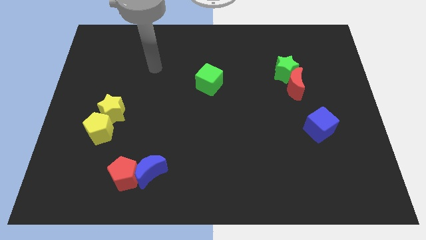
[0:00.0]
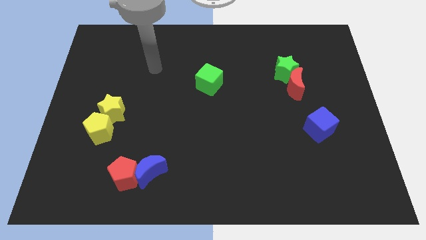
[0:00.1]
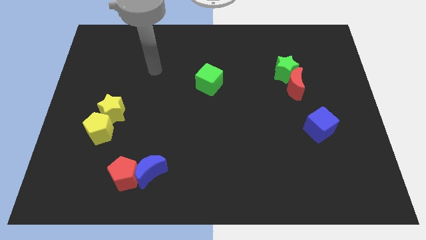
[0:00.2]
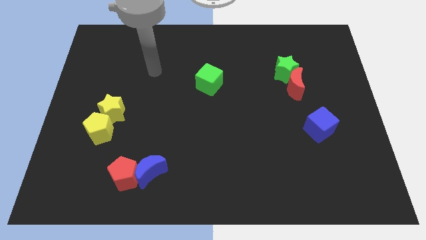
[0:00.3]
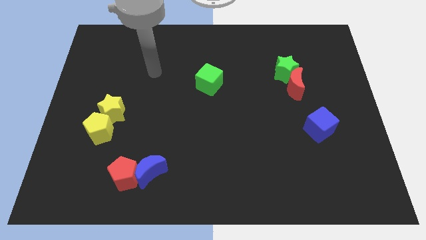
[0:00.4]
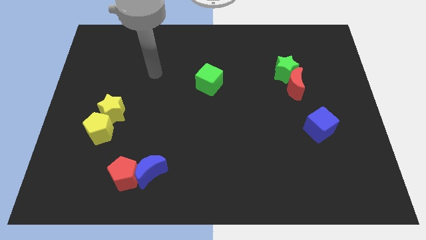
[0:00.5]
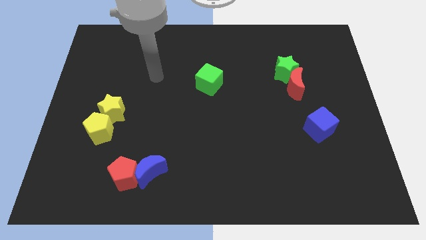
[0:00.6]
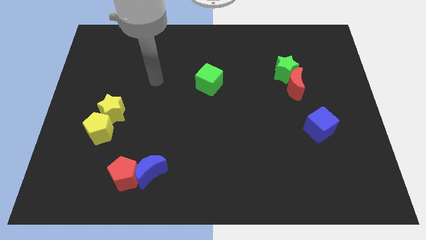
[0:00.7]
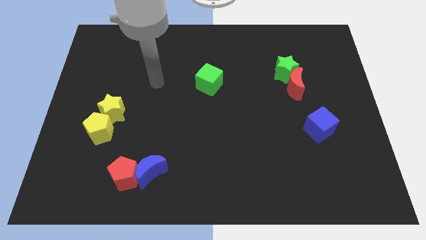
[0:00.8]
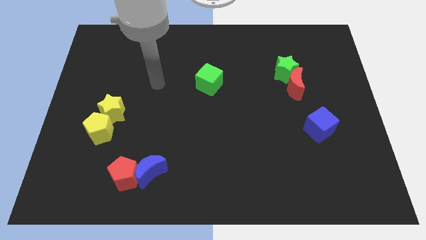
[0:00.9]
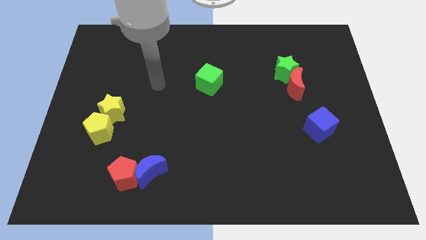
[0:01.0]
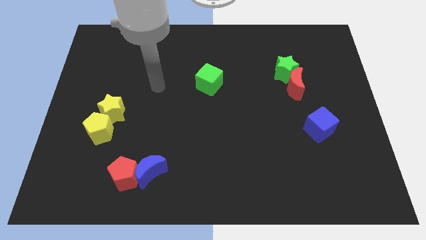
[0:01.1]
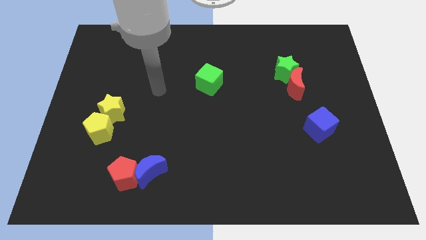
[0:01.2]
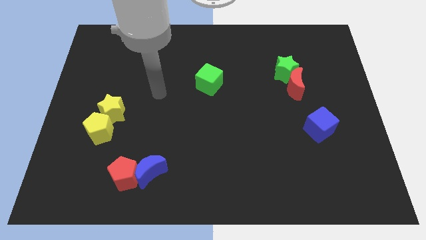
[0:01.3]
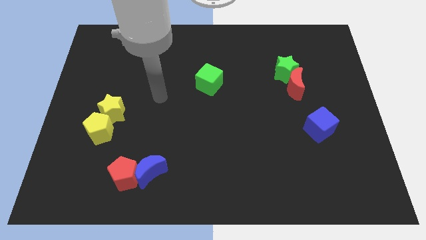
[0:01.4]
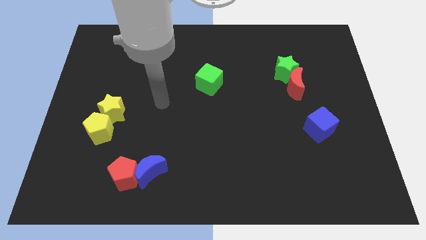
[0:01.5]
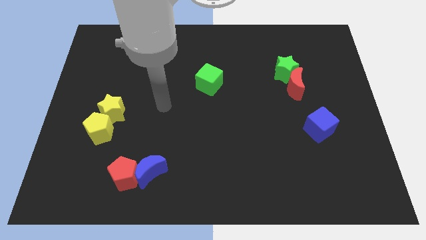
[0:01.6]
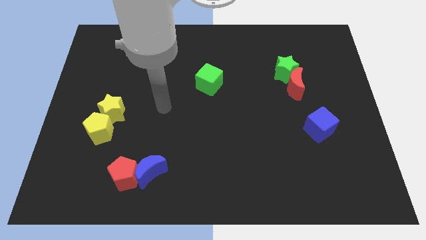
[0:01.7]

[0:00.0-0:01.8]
move your arm to the right side of the yellow star

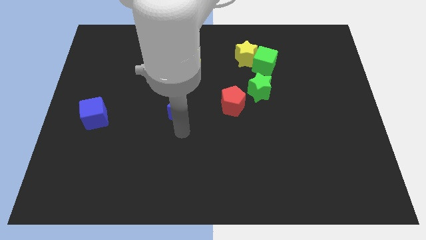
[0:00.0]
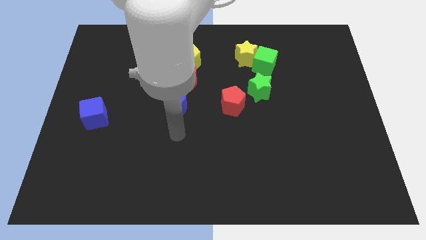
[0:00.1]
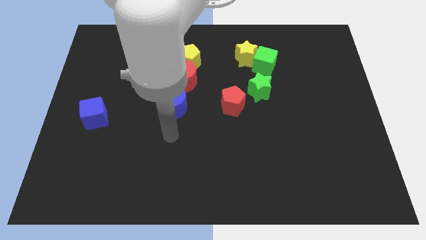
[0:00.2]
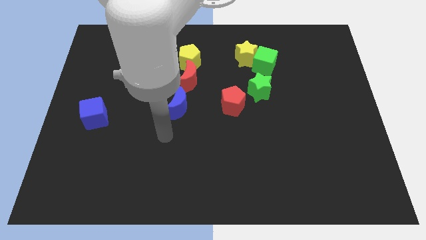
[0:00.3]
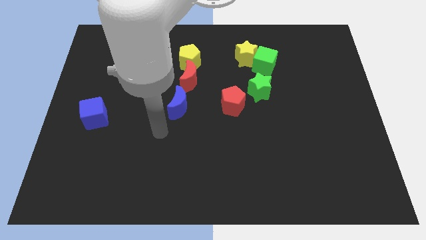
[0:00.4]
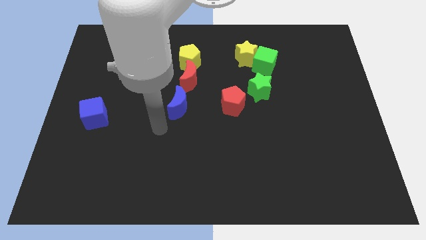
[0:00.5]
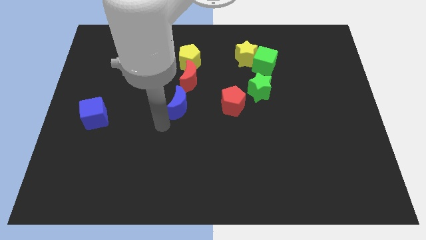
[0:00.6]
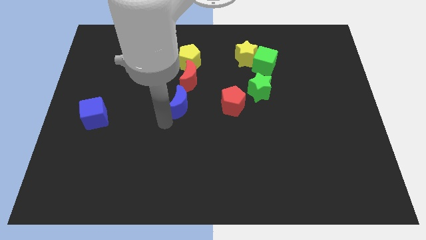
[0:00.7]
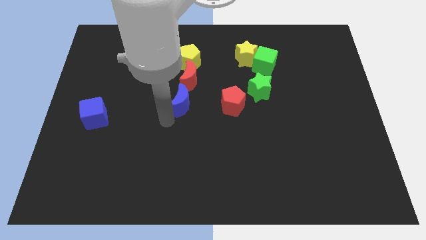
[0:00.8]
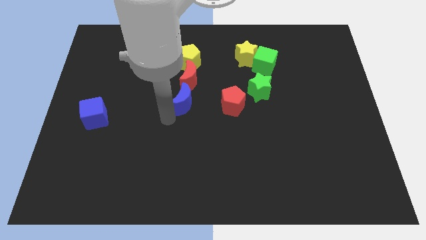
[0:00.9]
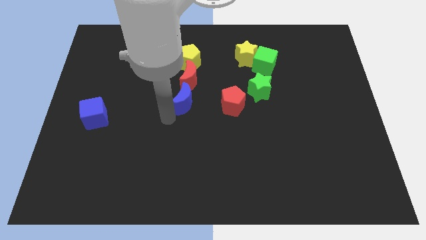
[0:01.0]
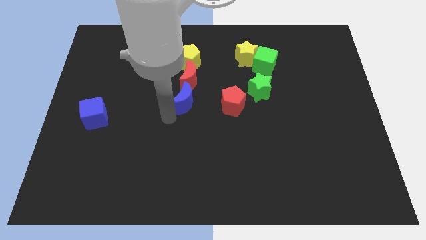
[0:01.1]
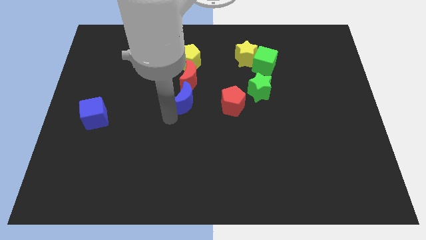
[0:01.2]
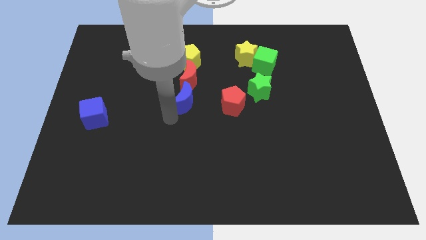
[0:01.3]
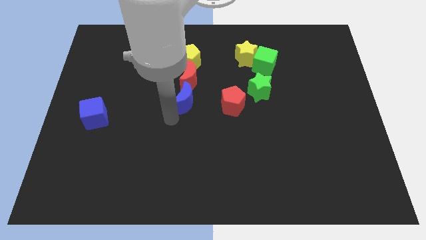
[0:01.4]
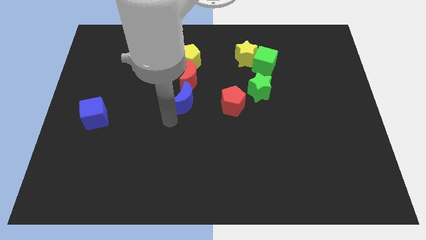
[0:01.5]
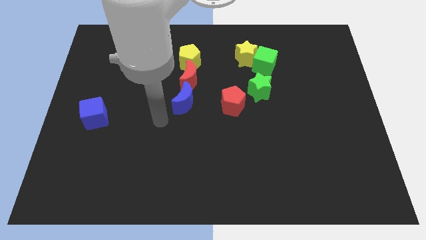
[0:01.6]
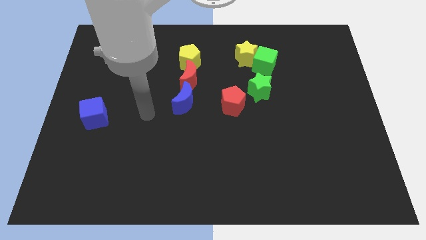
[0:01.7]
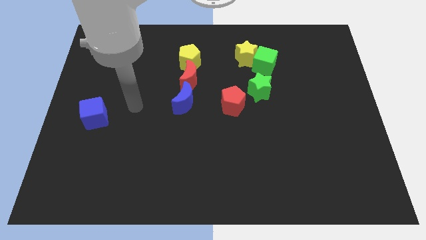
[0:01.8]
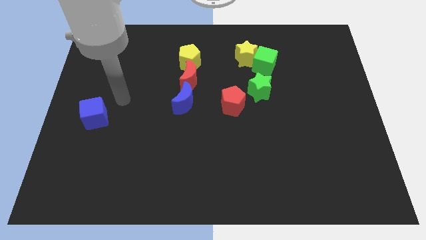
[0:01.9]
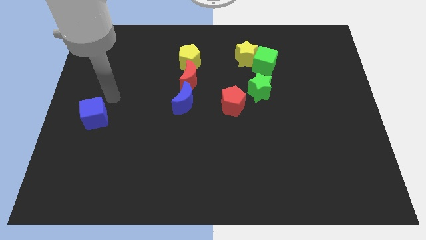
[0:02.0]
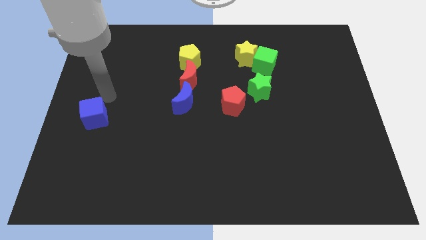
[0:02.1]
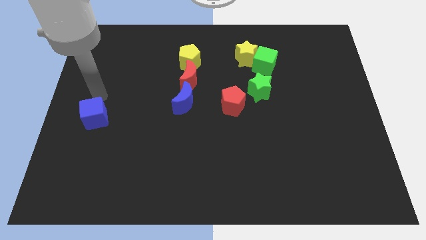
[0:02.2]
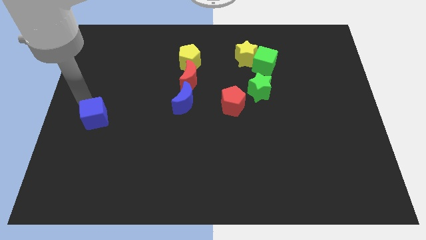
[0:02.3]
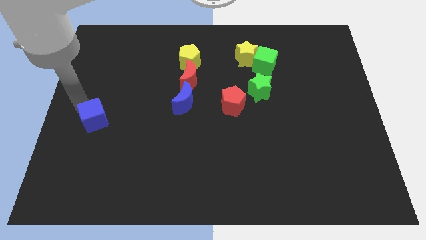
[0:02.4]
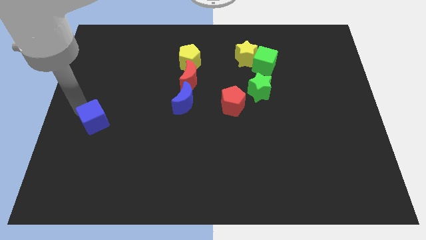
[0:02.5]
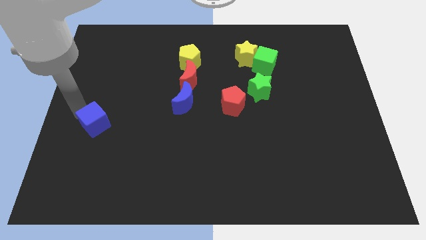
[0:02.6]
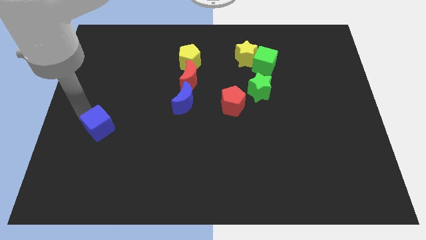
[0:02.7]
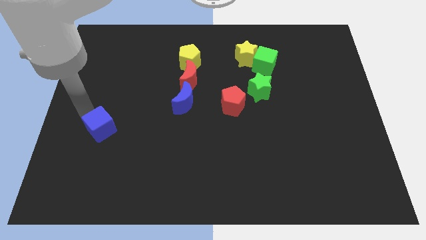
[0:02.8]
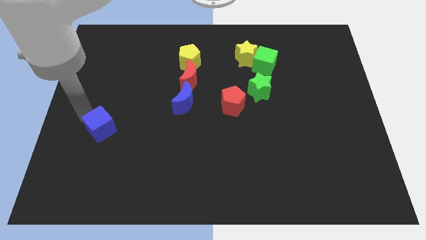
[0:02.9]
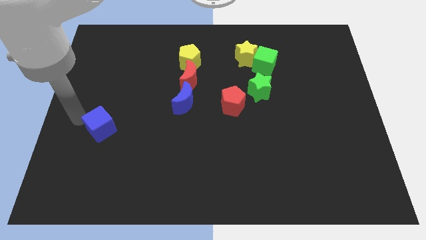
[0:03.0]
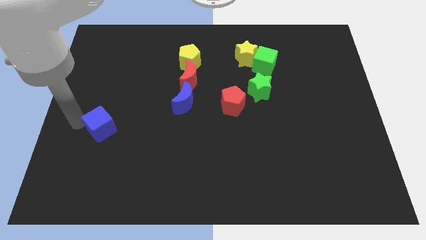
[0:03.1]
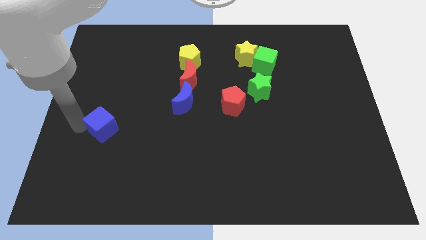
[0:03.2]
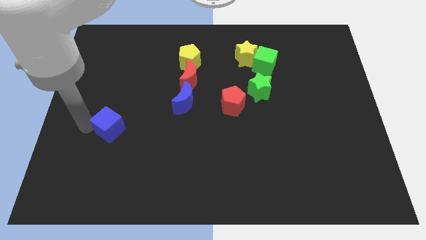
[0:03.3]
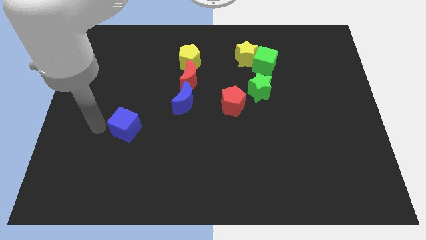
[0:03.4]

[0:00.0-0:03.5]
place the blue cube to the bottom left of the blue moon

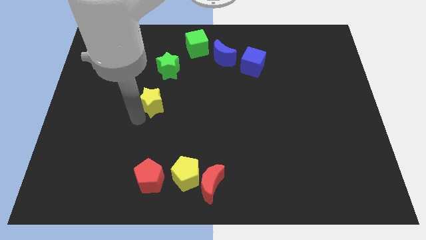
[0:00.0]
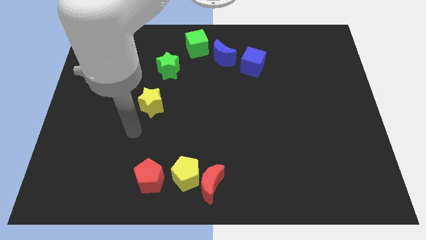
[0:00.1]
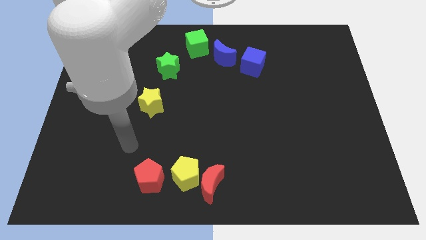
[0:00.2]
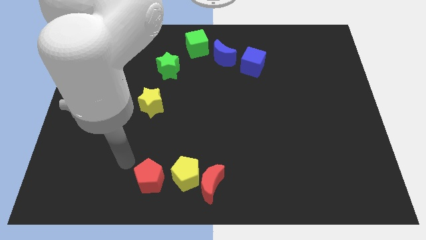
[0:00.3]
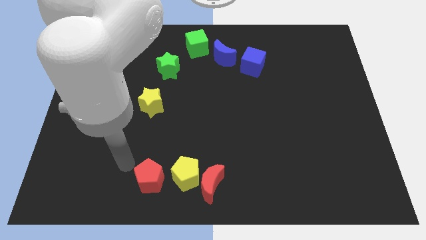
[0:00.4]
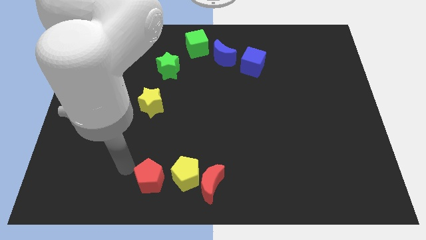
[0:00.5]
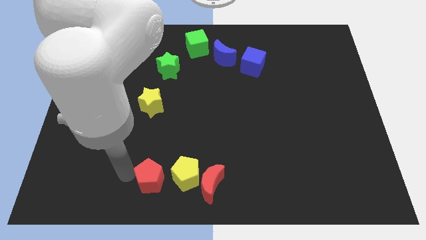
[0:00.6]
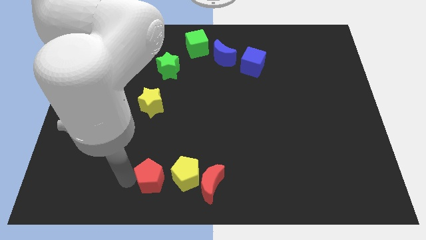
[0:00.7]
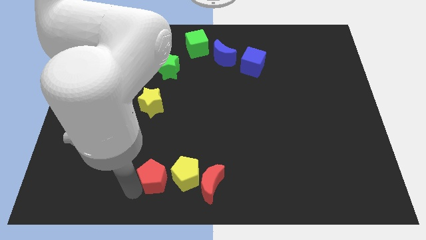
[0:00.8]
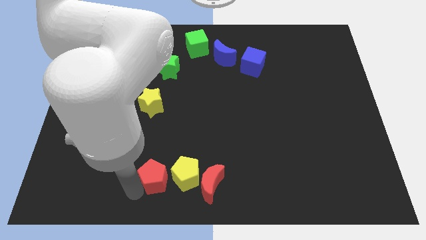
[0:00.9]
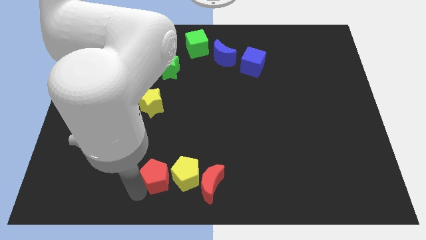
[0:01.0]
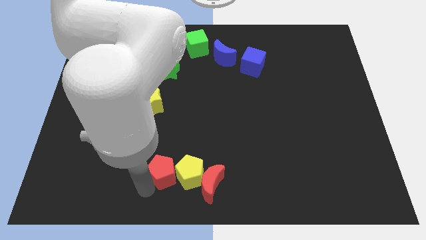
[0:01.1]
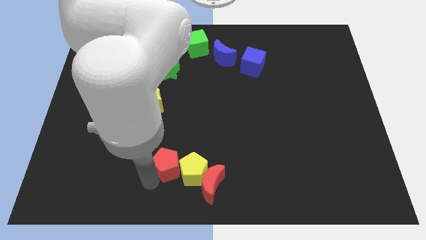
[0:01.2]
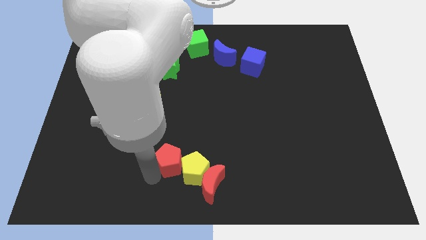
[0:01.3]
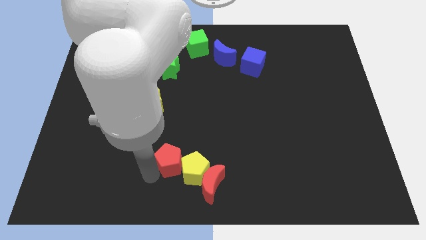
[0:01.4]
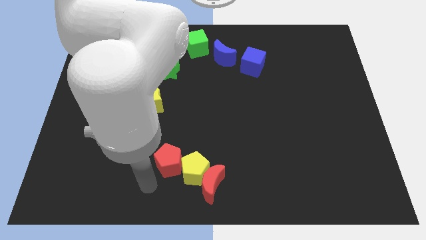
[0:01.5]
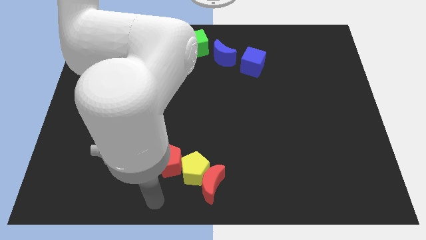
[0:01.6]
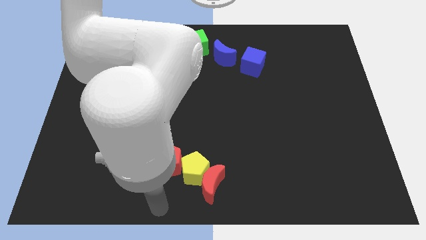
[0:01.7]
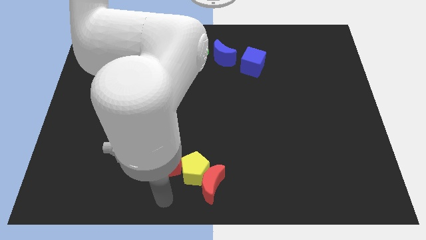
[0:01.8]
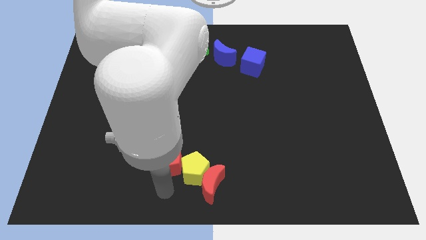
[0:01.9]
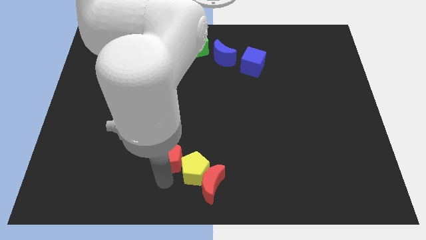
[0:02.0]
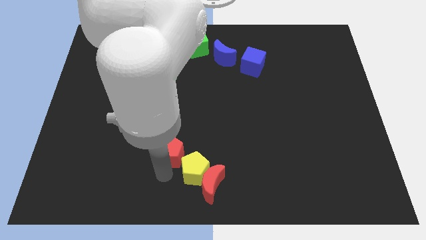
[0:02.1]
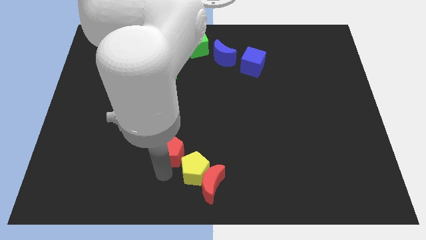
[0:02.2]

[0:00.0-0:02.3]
move the red pentagon to the top left corner of the yellow pentagon

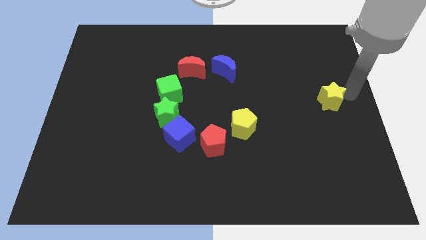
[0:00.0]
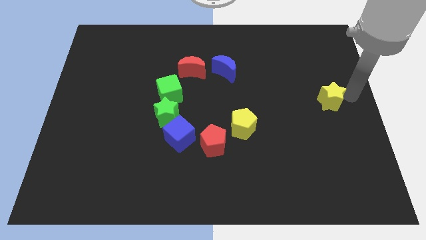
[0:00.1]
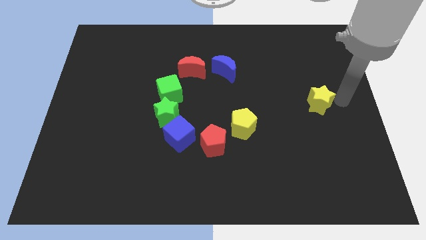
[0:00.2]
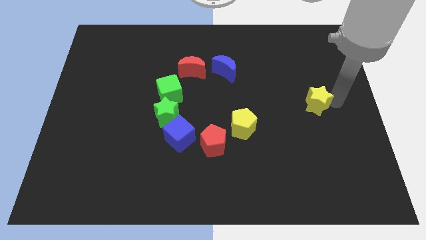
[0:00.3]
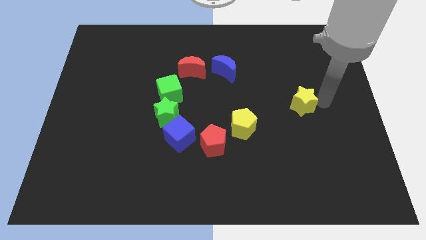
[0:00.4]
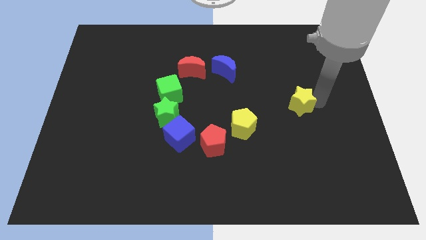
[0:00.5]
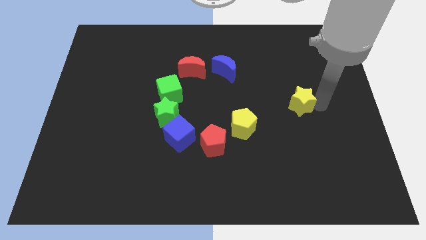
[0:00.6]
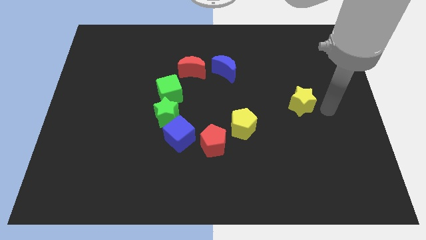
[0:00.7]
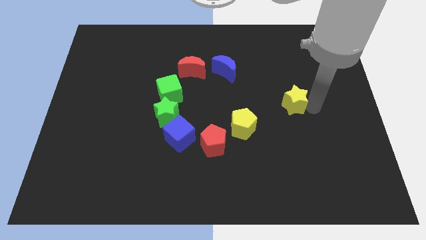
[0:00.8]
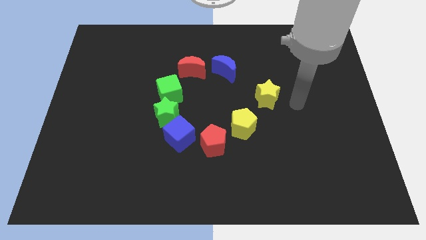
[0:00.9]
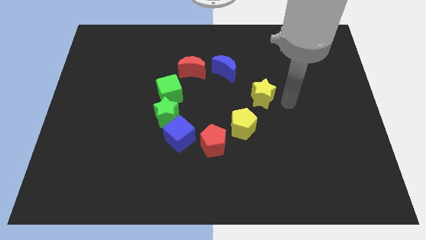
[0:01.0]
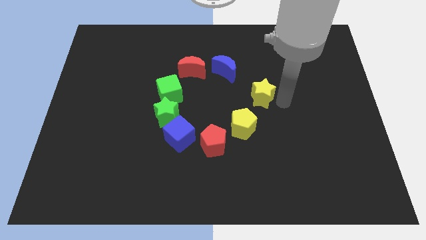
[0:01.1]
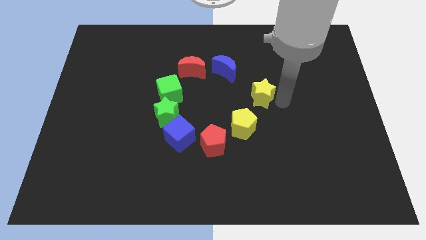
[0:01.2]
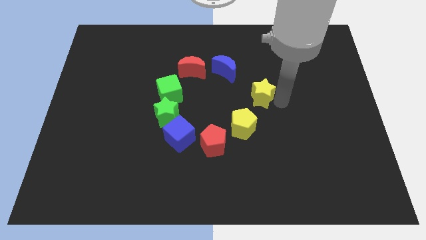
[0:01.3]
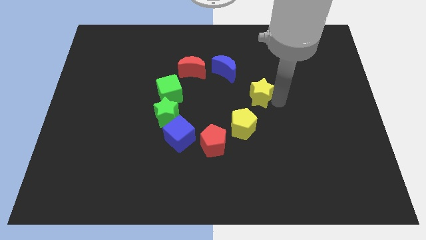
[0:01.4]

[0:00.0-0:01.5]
push the yellow star in a circle in between the blue crescent and yellow pentagon
